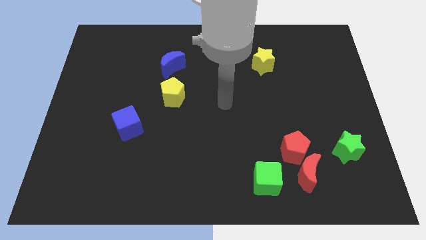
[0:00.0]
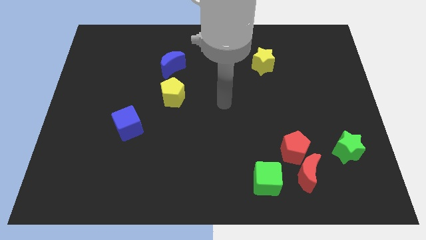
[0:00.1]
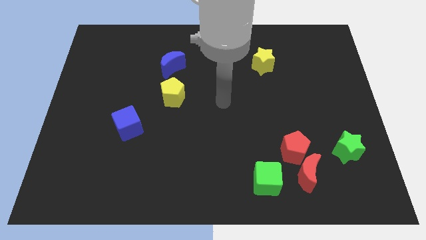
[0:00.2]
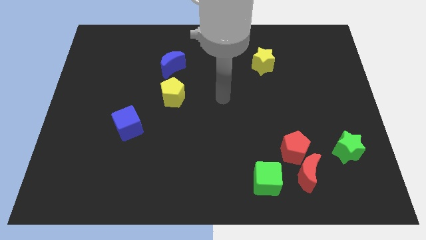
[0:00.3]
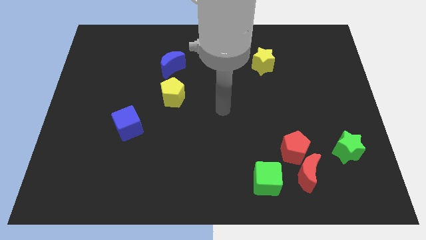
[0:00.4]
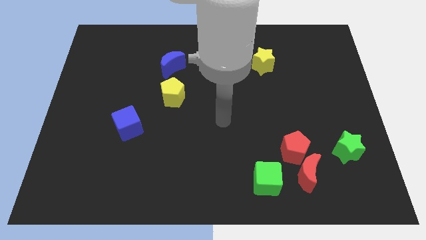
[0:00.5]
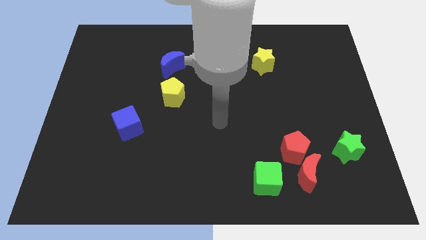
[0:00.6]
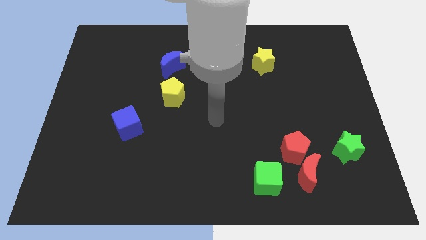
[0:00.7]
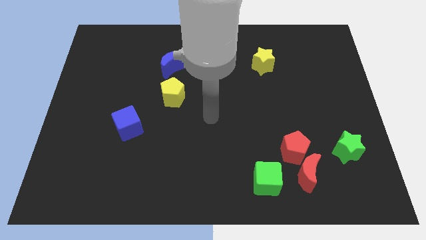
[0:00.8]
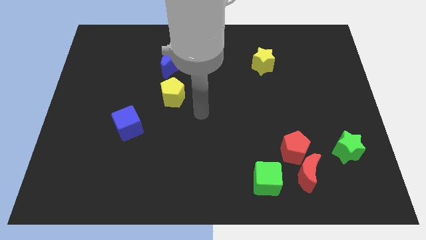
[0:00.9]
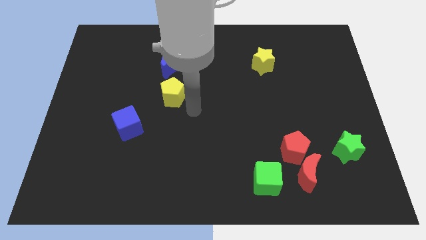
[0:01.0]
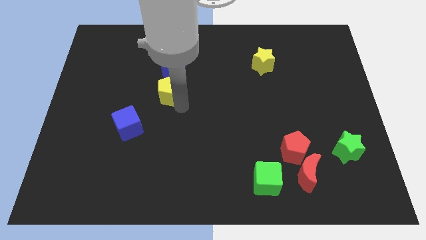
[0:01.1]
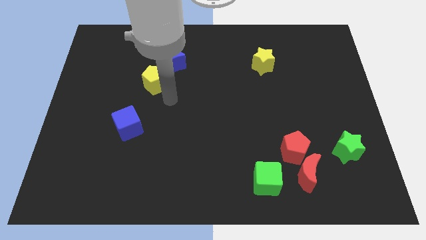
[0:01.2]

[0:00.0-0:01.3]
touch the bottom of yellow pentagon

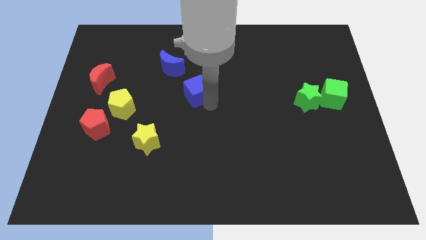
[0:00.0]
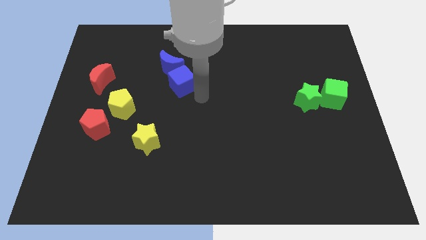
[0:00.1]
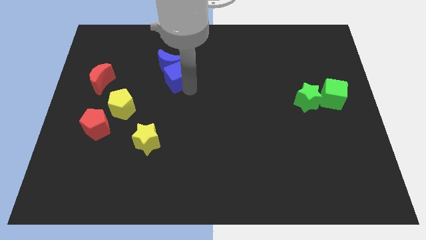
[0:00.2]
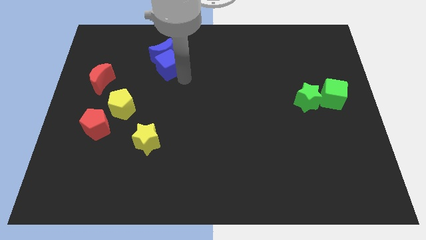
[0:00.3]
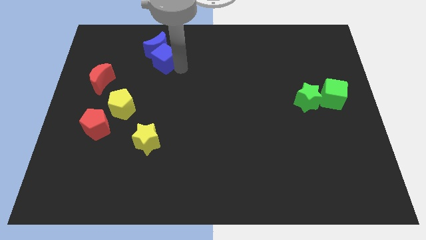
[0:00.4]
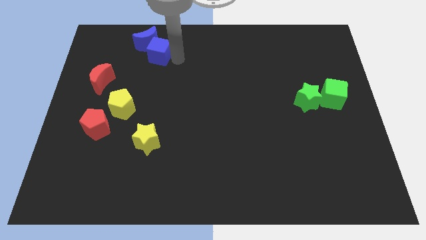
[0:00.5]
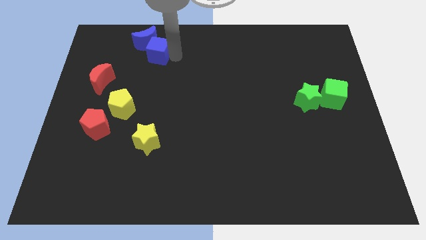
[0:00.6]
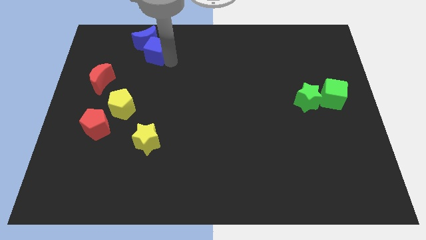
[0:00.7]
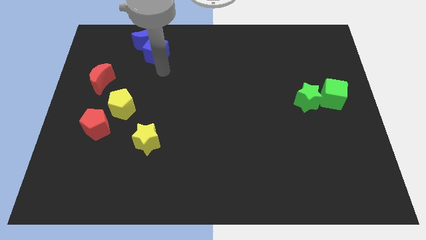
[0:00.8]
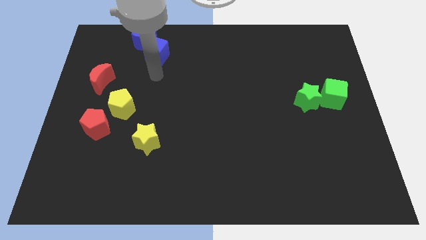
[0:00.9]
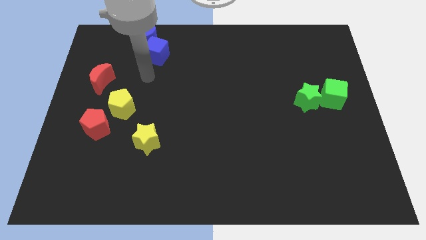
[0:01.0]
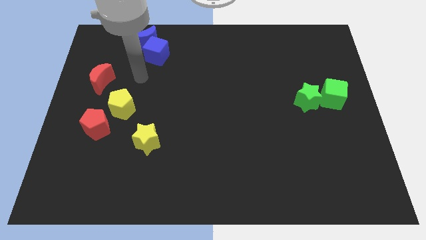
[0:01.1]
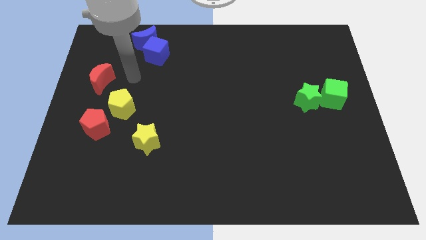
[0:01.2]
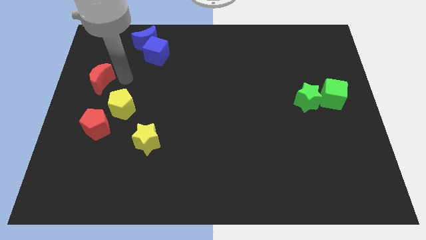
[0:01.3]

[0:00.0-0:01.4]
move blue blocks towards the top side

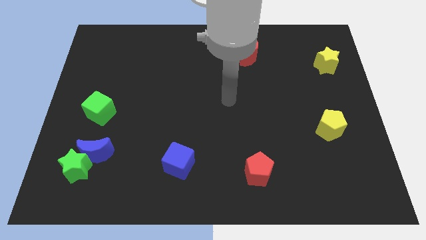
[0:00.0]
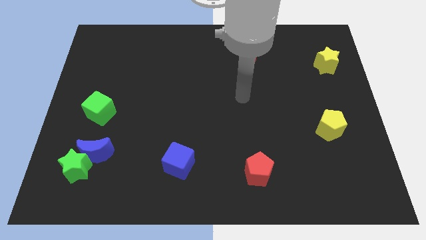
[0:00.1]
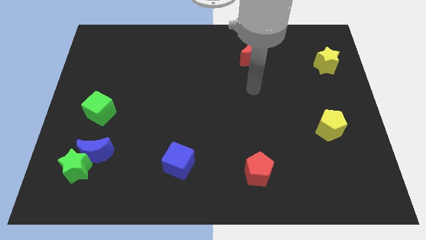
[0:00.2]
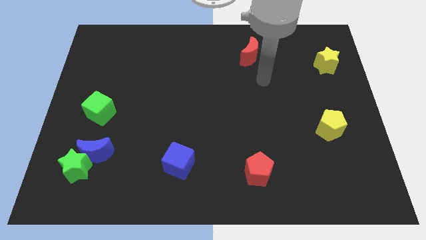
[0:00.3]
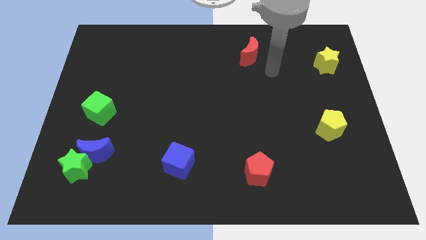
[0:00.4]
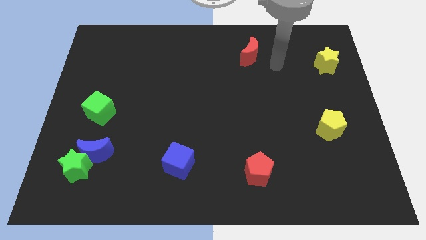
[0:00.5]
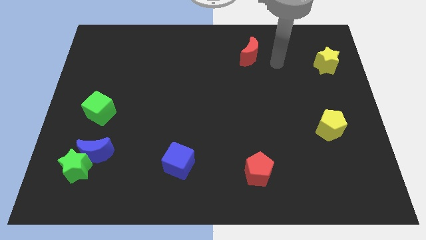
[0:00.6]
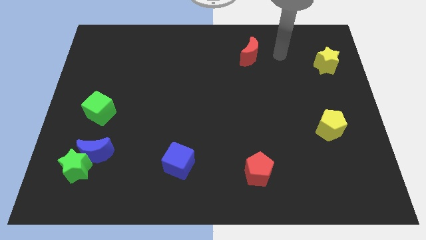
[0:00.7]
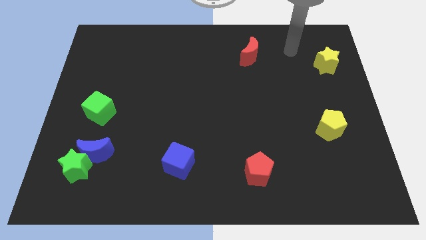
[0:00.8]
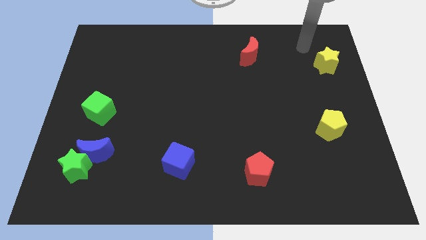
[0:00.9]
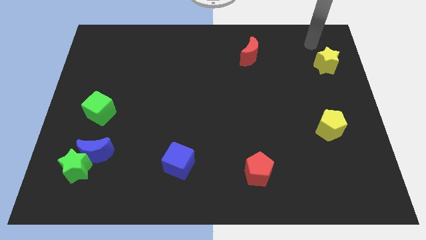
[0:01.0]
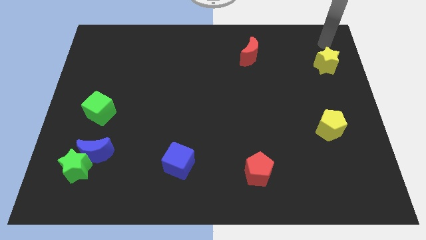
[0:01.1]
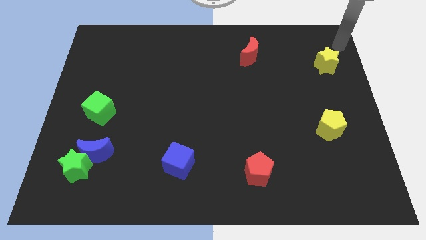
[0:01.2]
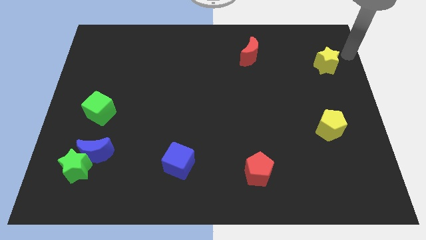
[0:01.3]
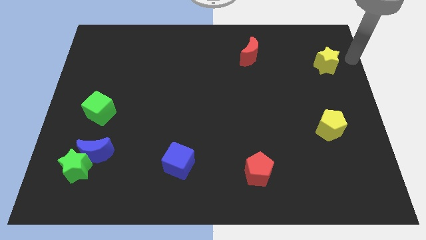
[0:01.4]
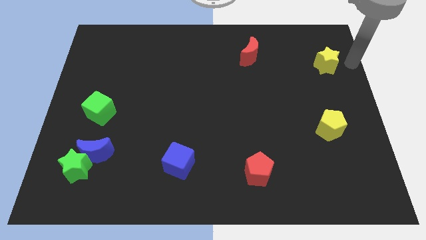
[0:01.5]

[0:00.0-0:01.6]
move yourself to the right side of the yellow star

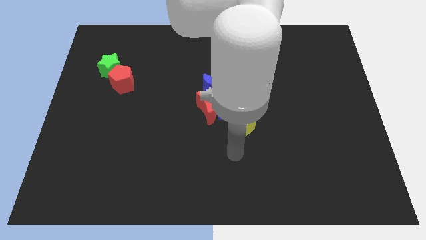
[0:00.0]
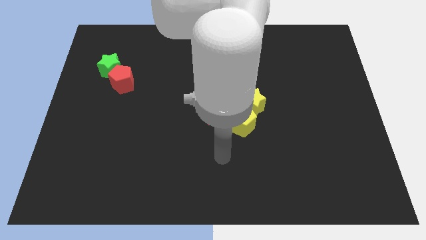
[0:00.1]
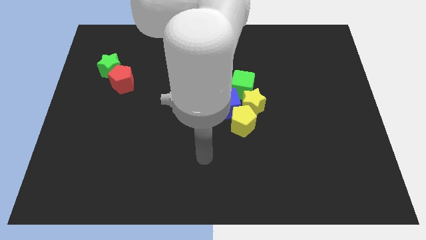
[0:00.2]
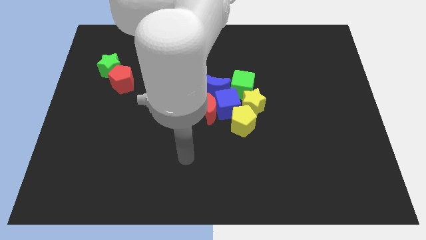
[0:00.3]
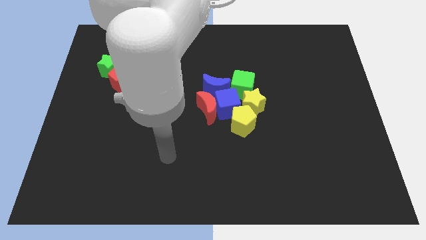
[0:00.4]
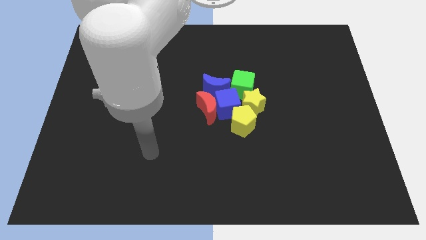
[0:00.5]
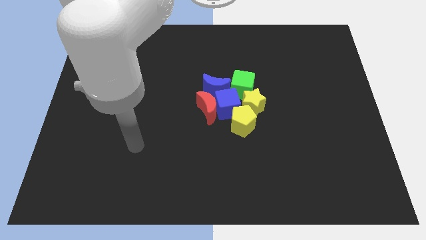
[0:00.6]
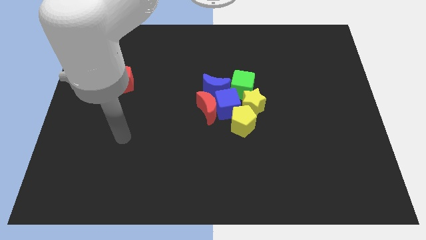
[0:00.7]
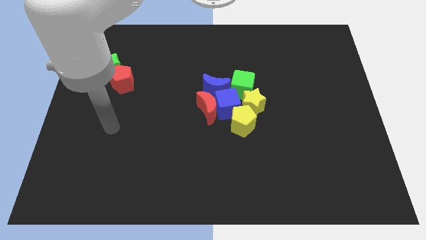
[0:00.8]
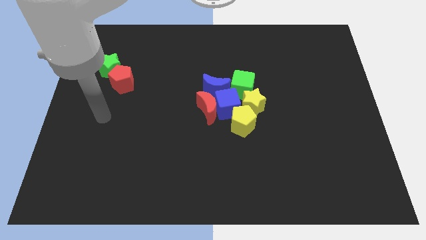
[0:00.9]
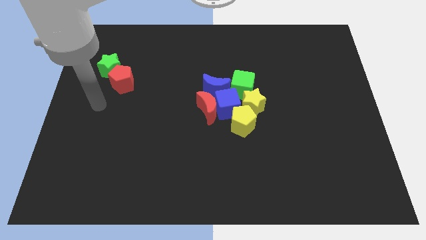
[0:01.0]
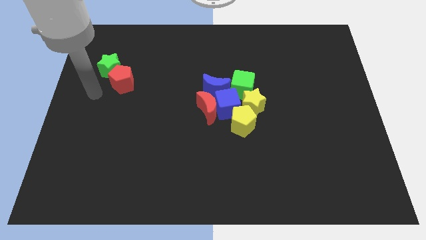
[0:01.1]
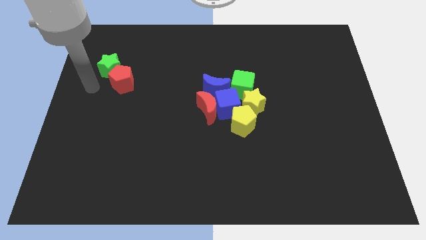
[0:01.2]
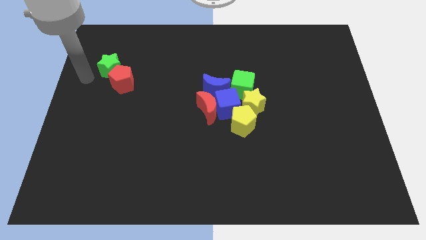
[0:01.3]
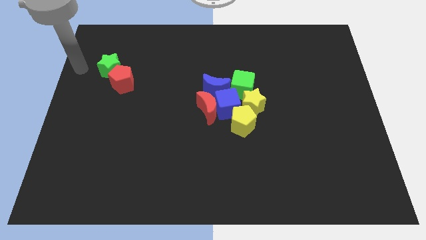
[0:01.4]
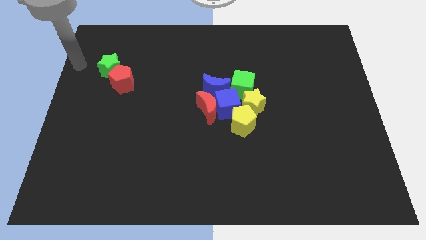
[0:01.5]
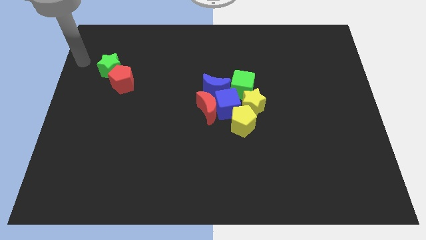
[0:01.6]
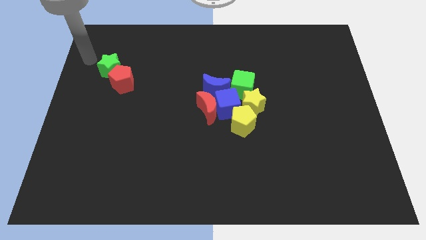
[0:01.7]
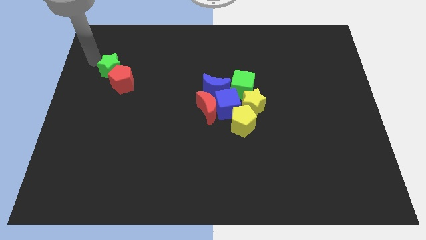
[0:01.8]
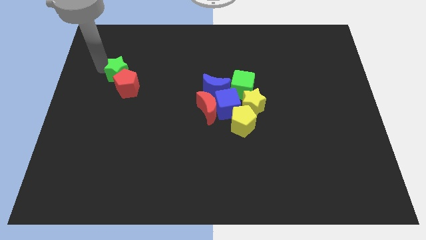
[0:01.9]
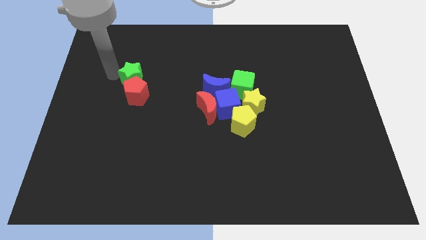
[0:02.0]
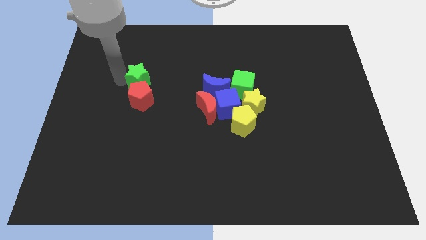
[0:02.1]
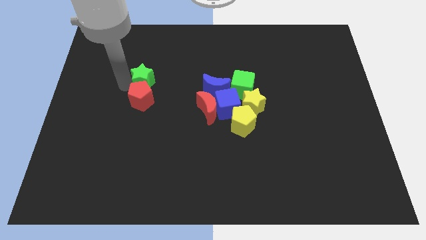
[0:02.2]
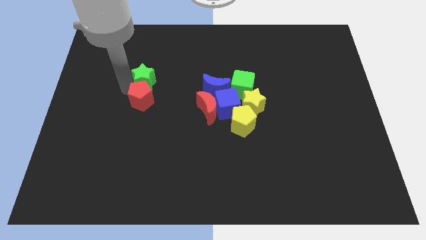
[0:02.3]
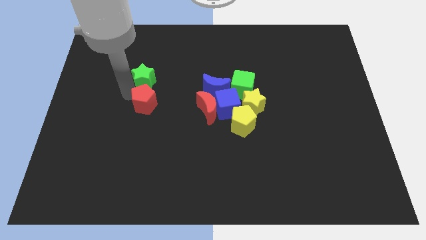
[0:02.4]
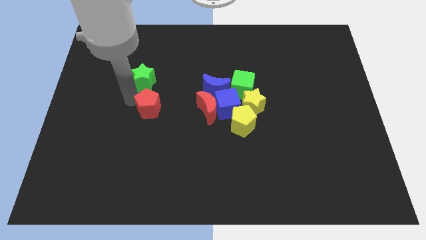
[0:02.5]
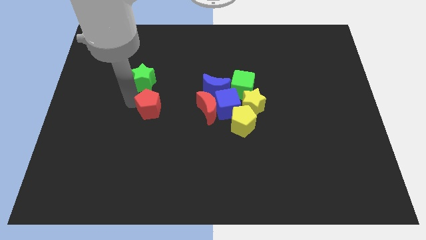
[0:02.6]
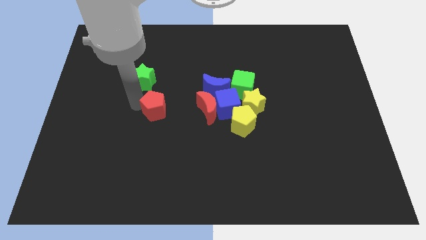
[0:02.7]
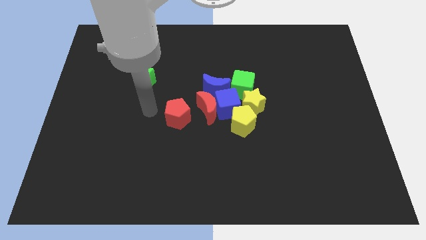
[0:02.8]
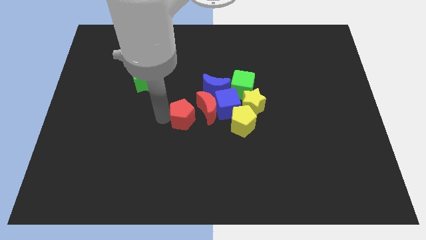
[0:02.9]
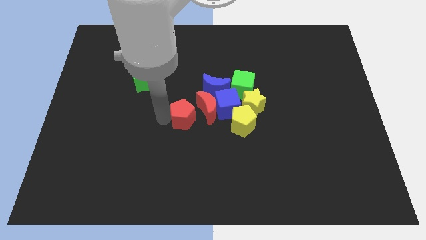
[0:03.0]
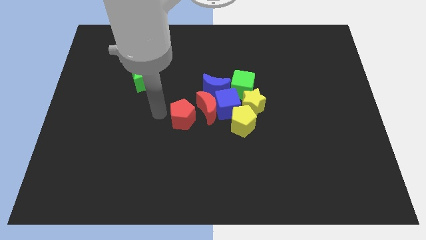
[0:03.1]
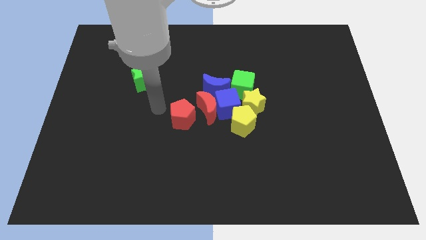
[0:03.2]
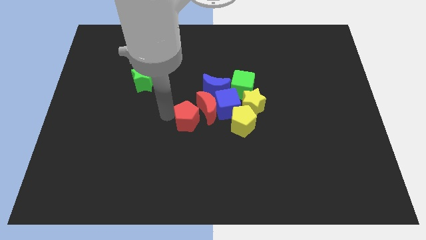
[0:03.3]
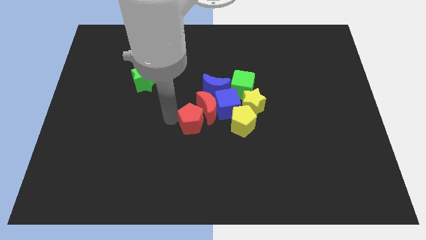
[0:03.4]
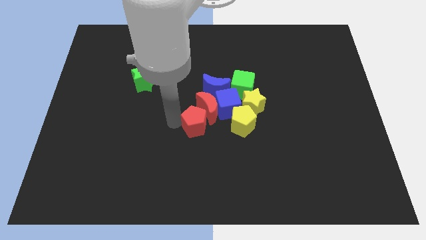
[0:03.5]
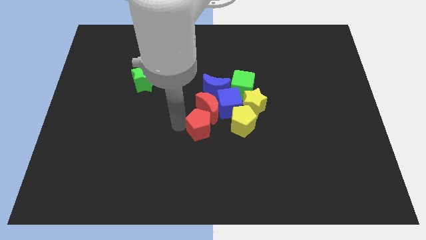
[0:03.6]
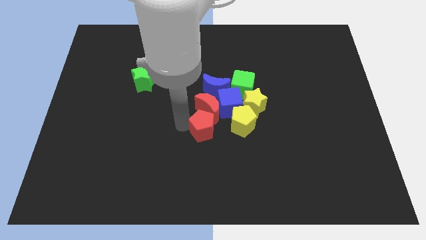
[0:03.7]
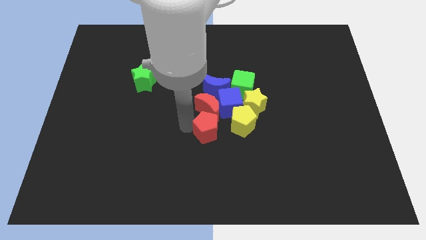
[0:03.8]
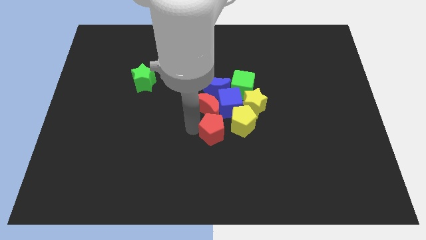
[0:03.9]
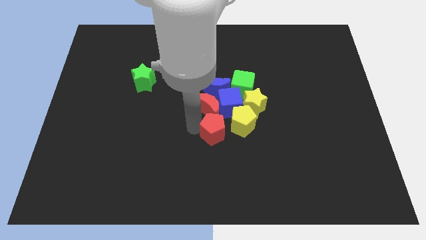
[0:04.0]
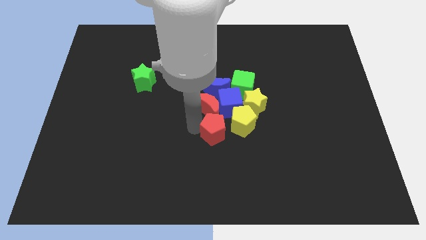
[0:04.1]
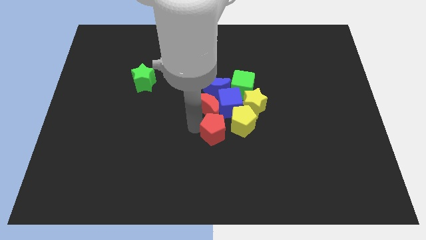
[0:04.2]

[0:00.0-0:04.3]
place the red pentagon below the red crescent

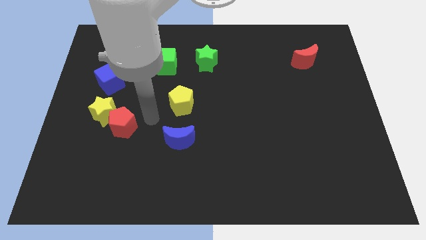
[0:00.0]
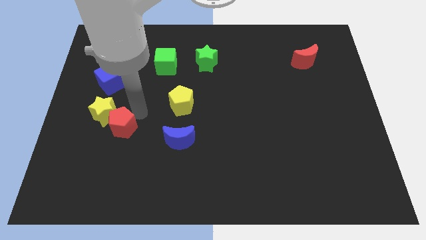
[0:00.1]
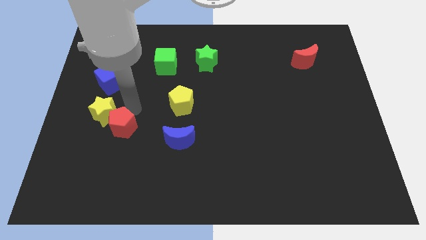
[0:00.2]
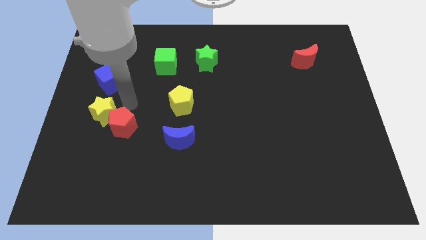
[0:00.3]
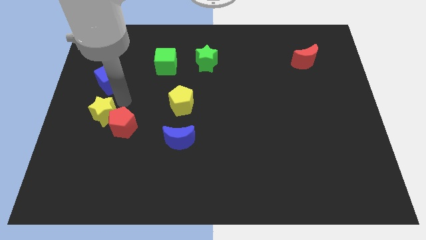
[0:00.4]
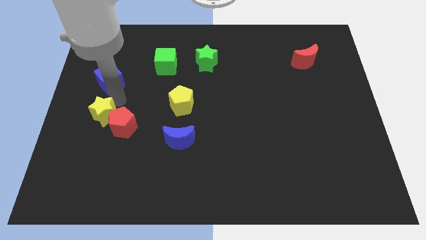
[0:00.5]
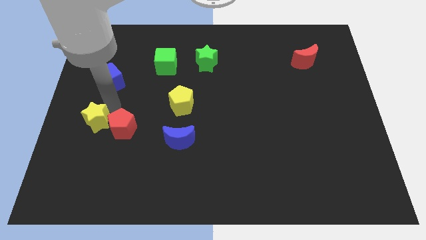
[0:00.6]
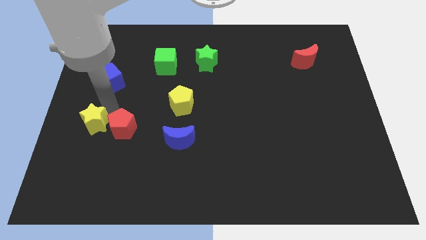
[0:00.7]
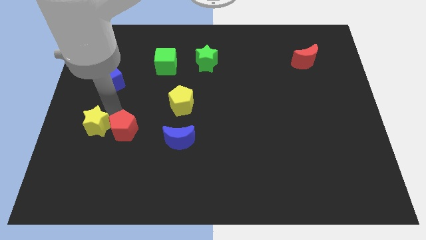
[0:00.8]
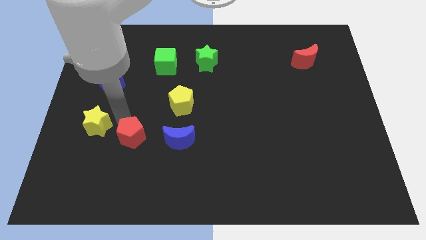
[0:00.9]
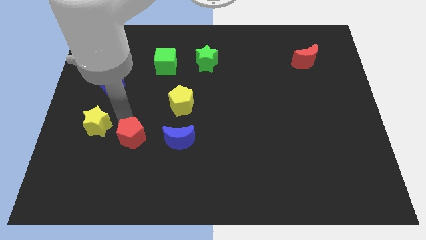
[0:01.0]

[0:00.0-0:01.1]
separate the yellow star and red pentagon
